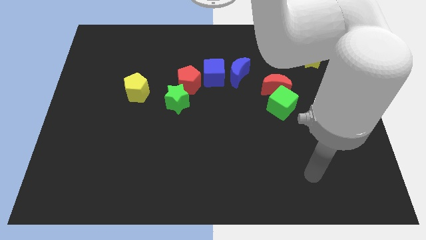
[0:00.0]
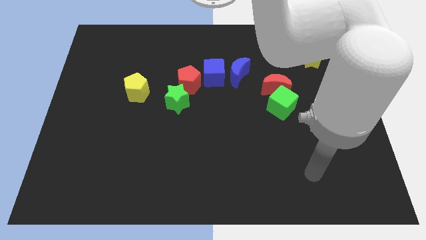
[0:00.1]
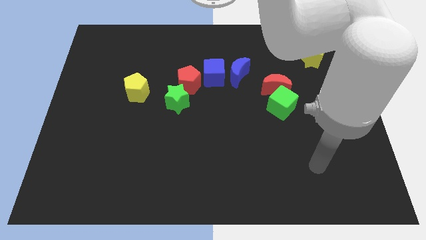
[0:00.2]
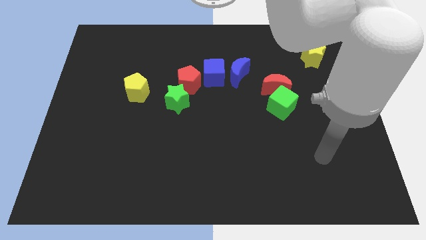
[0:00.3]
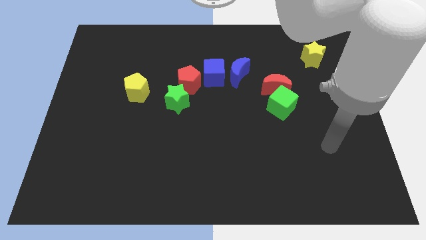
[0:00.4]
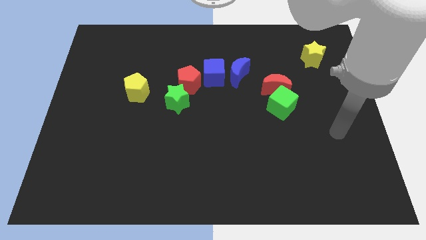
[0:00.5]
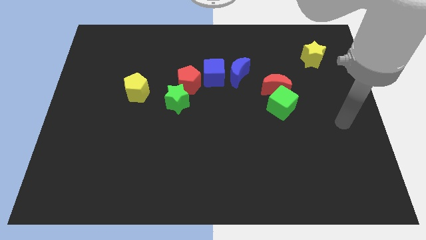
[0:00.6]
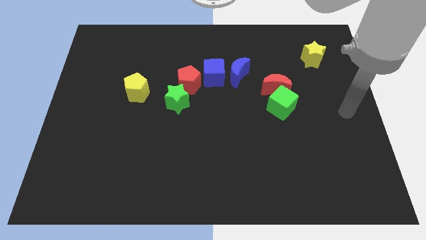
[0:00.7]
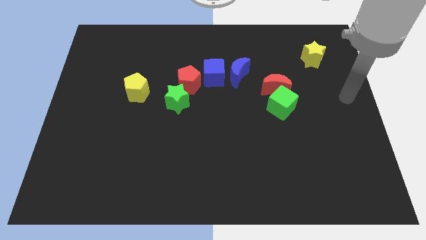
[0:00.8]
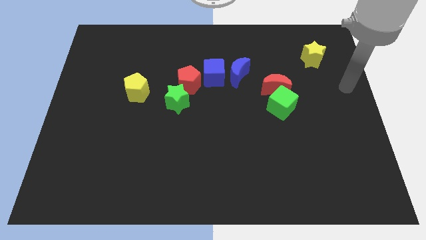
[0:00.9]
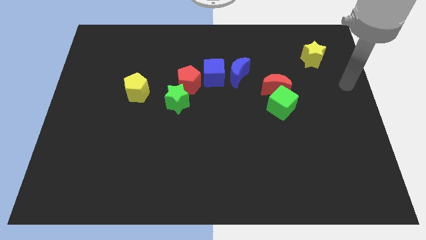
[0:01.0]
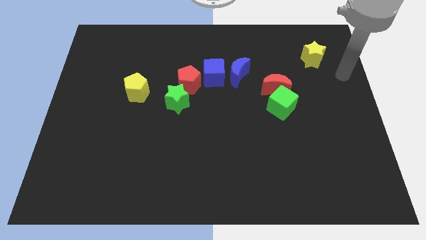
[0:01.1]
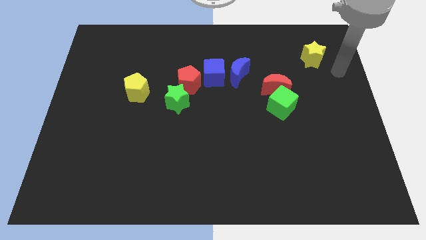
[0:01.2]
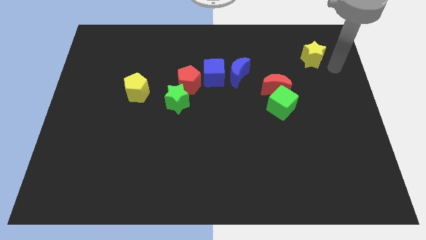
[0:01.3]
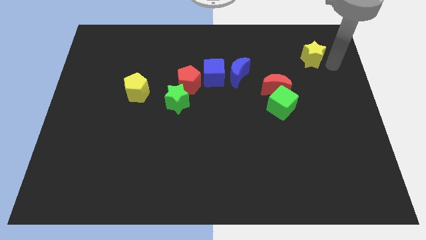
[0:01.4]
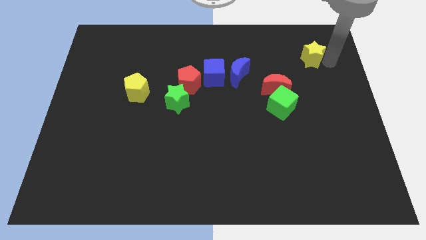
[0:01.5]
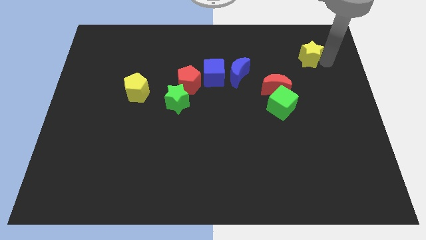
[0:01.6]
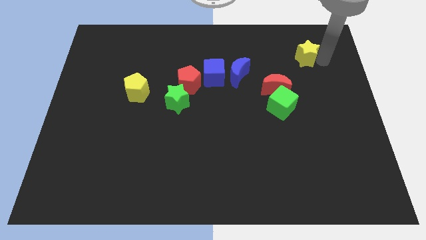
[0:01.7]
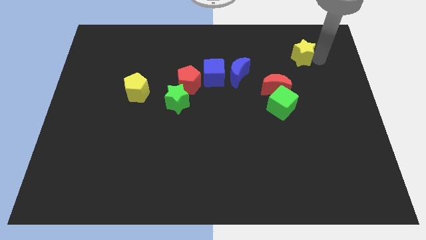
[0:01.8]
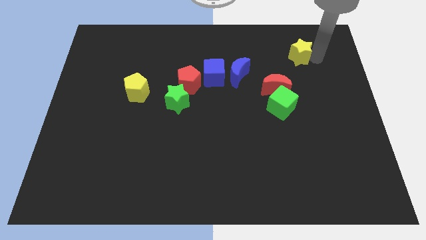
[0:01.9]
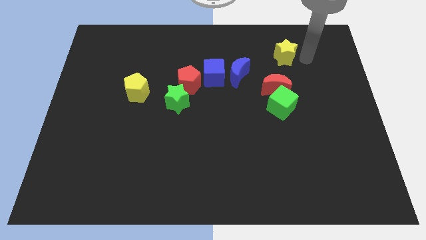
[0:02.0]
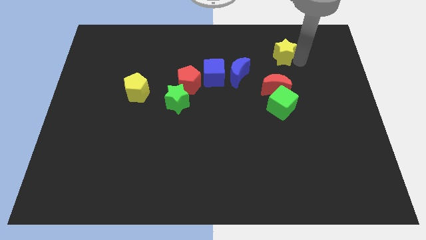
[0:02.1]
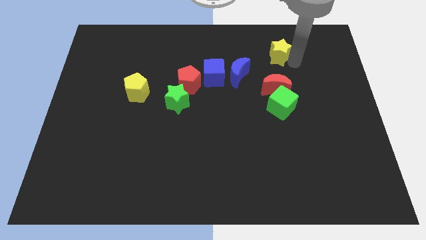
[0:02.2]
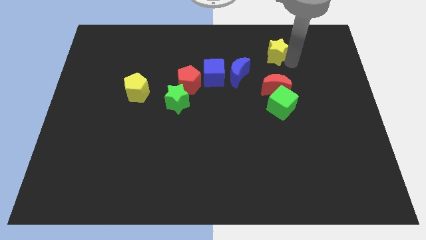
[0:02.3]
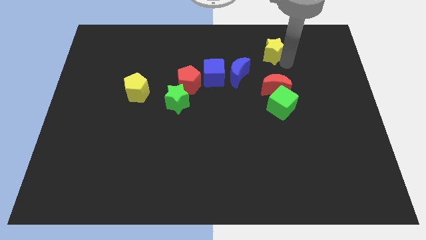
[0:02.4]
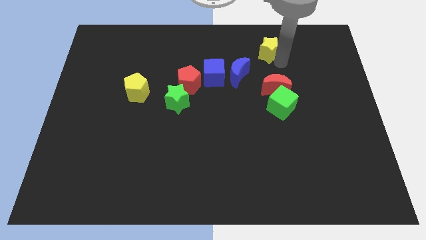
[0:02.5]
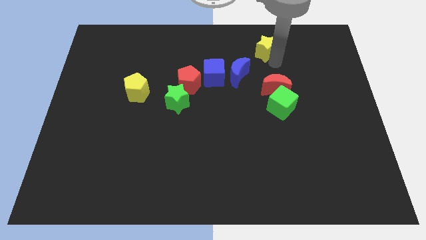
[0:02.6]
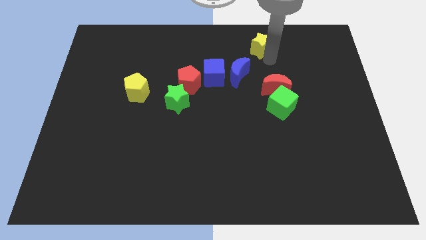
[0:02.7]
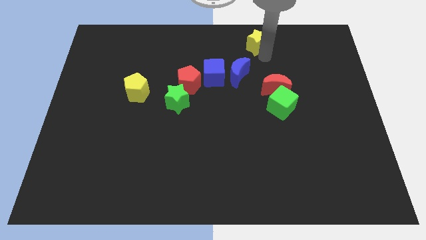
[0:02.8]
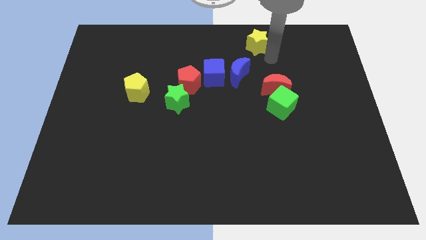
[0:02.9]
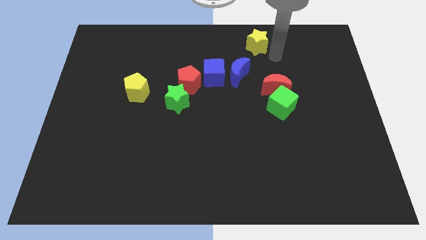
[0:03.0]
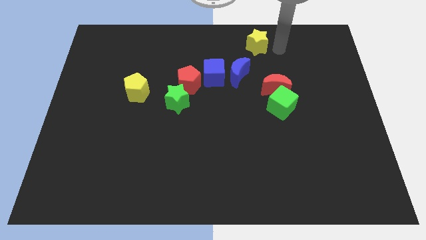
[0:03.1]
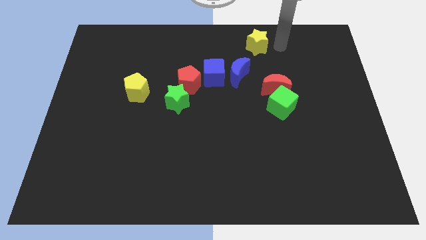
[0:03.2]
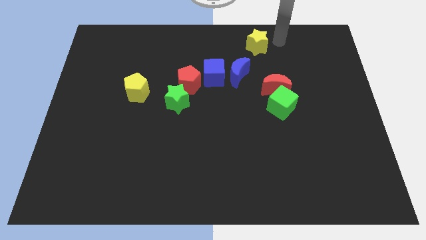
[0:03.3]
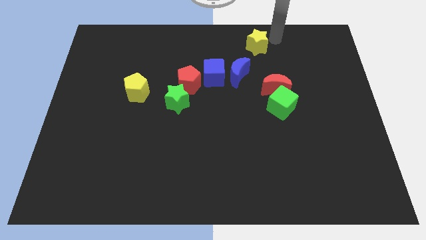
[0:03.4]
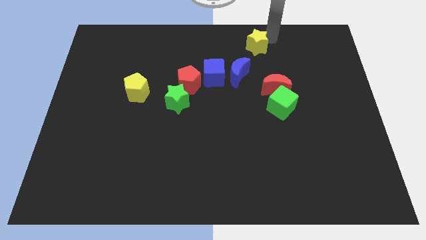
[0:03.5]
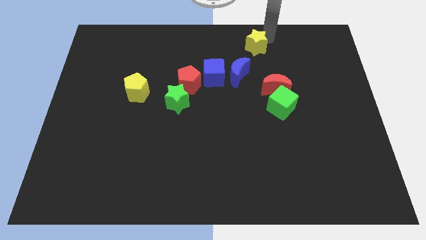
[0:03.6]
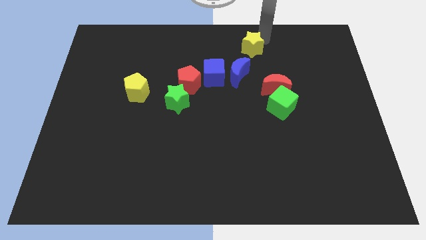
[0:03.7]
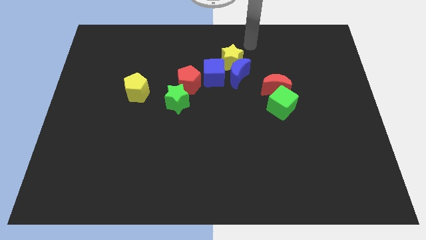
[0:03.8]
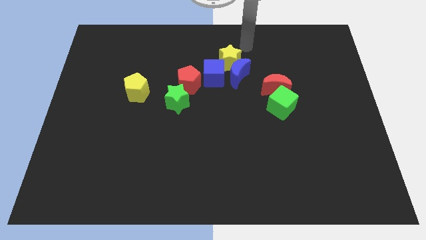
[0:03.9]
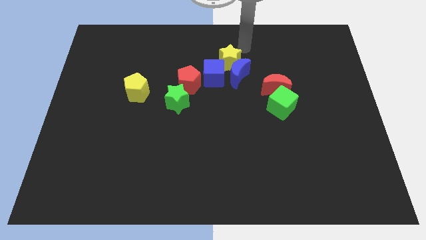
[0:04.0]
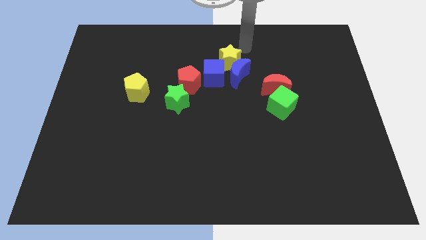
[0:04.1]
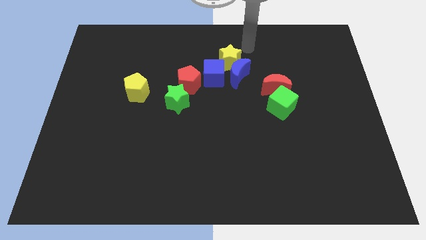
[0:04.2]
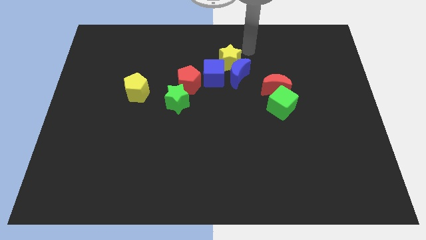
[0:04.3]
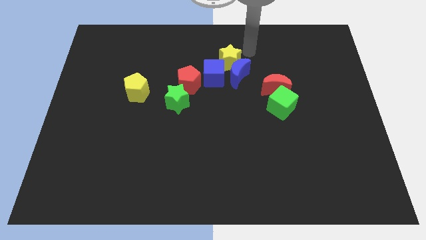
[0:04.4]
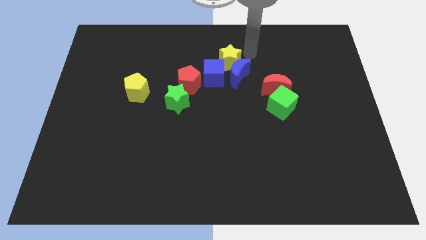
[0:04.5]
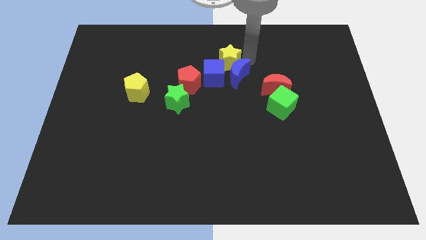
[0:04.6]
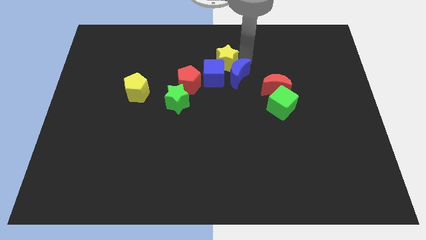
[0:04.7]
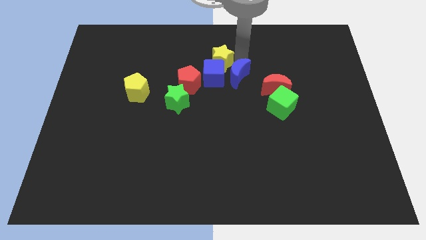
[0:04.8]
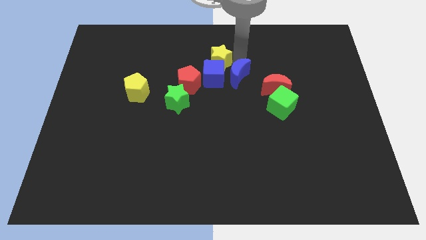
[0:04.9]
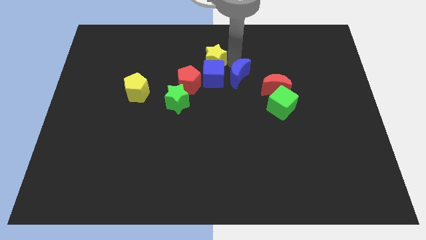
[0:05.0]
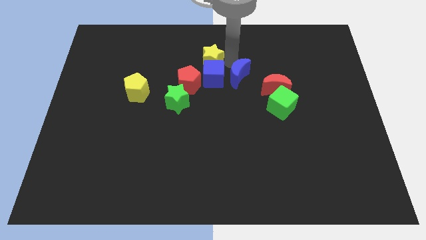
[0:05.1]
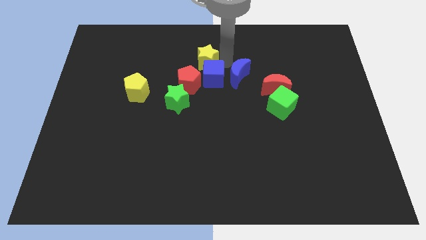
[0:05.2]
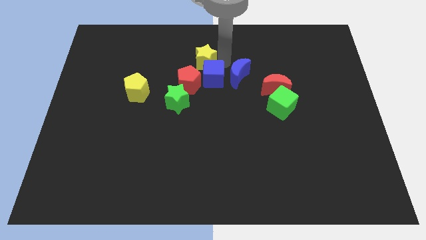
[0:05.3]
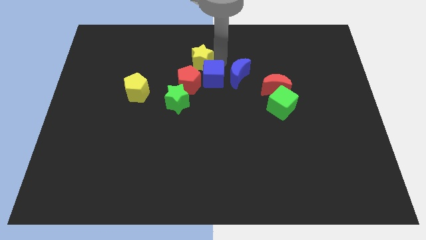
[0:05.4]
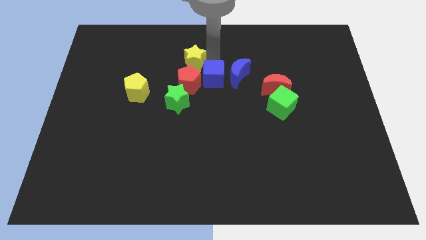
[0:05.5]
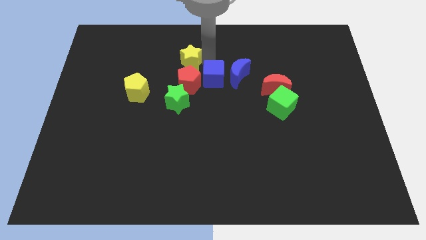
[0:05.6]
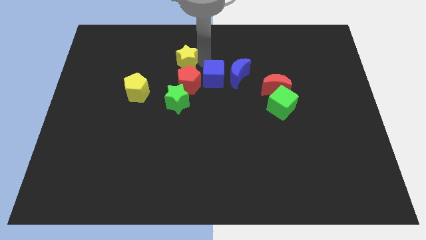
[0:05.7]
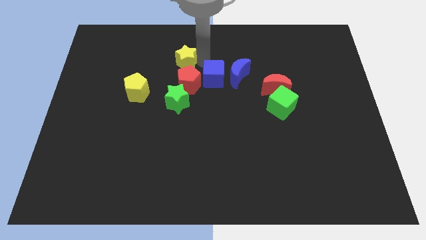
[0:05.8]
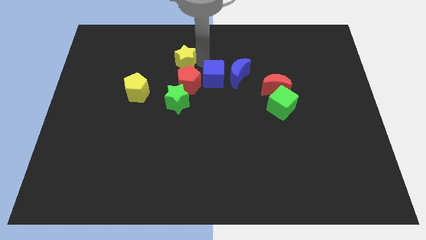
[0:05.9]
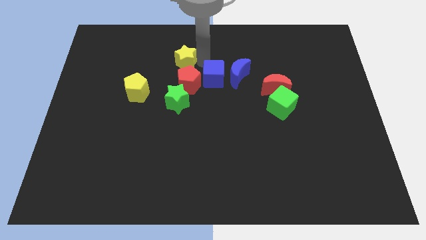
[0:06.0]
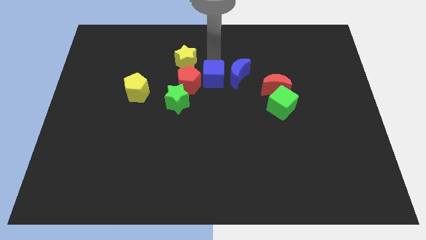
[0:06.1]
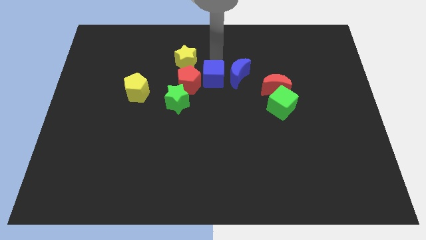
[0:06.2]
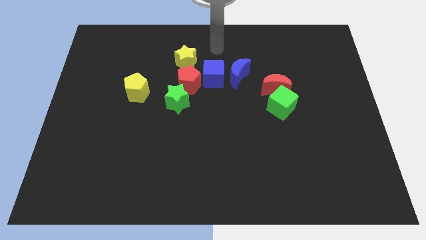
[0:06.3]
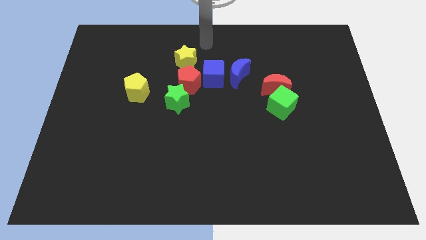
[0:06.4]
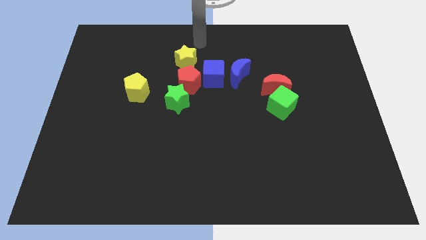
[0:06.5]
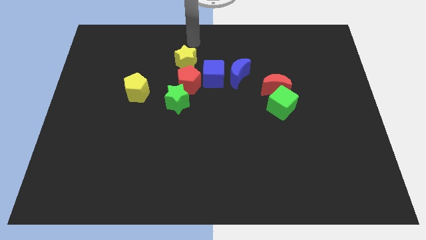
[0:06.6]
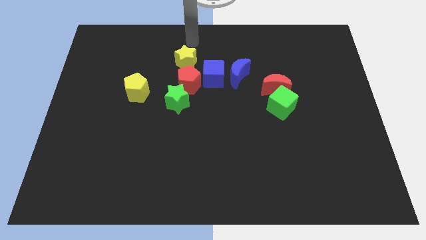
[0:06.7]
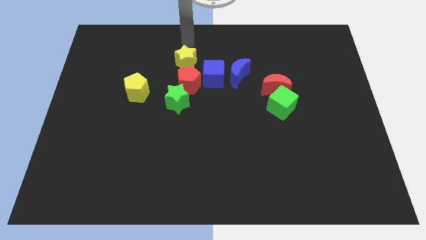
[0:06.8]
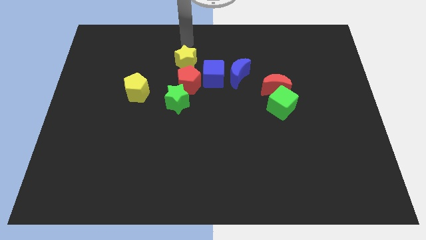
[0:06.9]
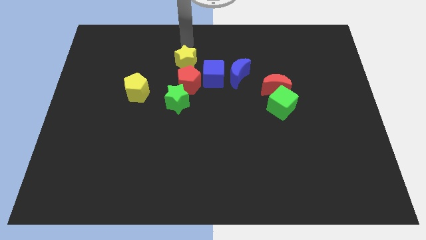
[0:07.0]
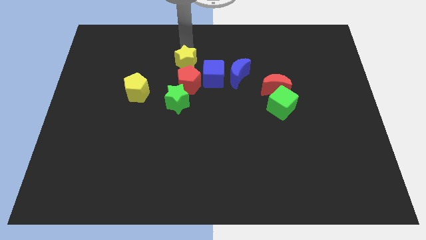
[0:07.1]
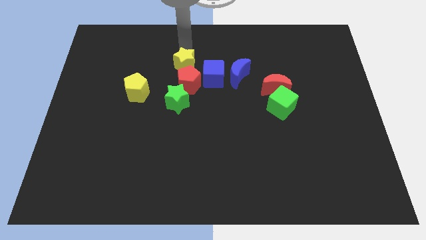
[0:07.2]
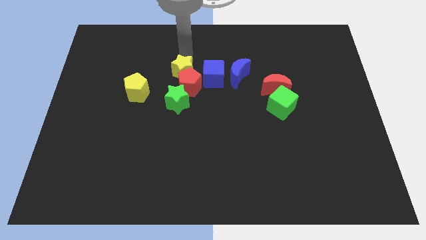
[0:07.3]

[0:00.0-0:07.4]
slide the yellow star to the red pentagon

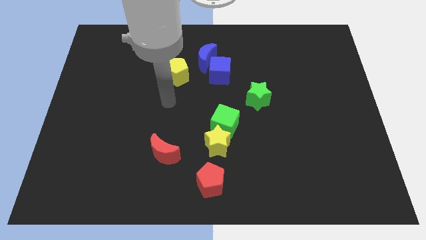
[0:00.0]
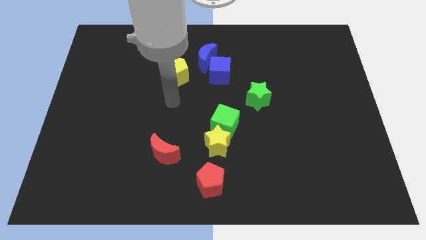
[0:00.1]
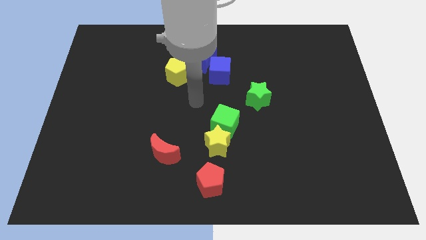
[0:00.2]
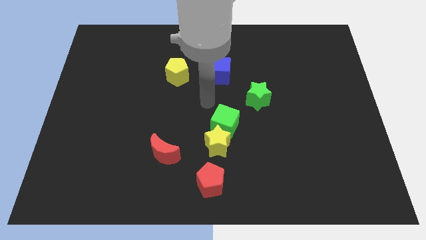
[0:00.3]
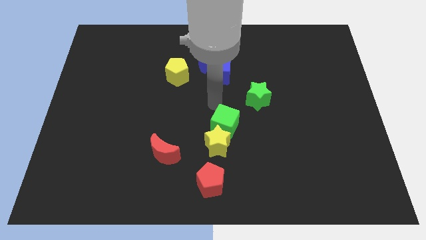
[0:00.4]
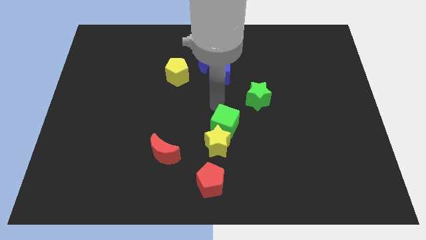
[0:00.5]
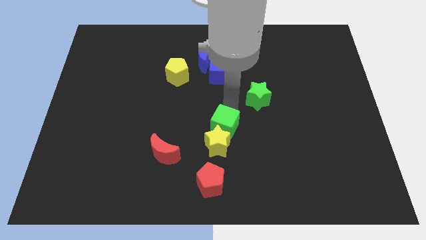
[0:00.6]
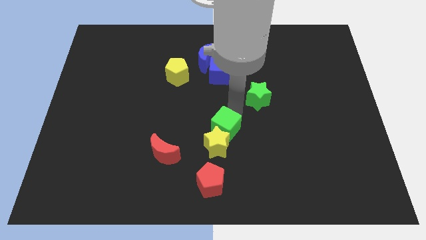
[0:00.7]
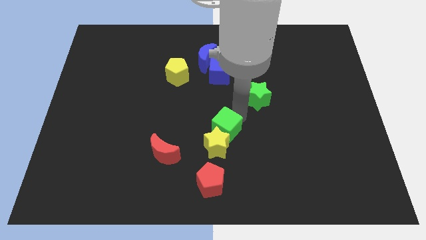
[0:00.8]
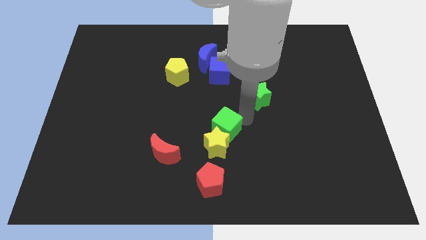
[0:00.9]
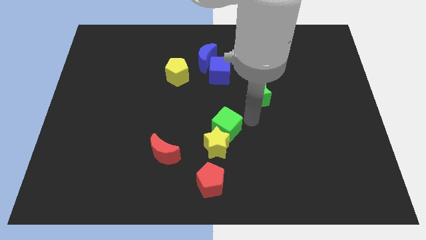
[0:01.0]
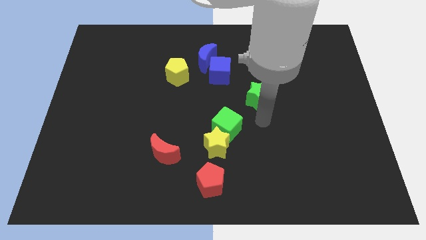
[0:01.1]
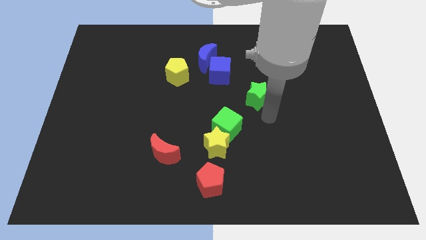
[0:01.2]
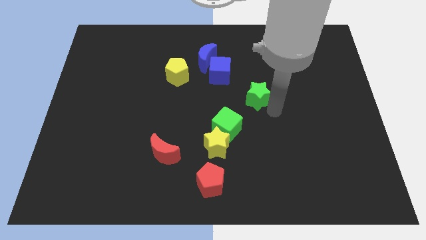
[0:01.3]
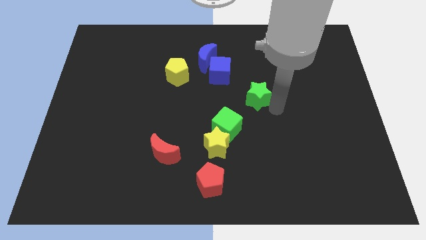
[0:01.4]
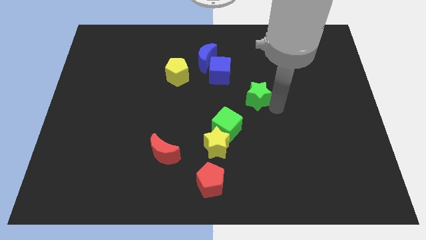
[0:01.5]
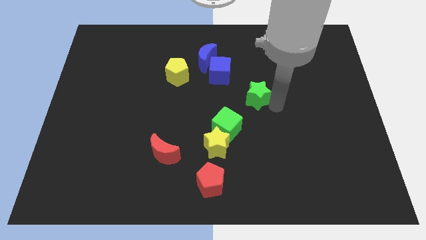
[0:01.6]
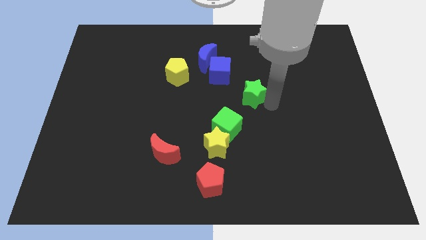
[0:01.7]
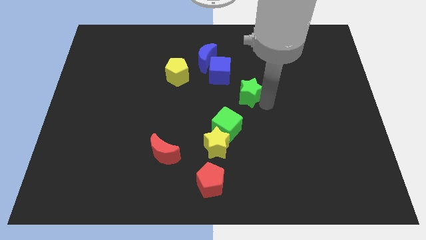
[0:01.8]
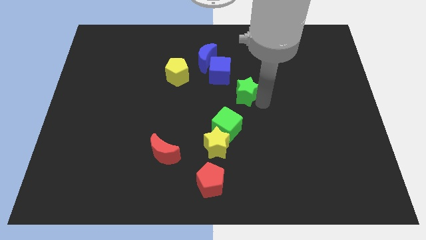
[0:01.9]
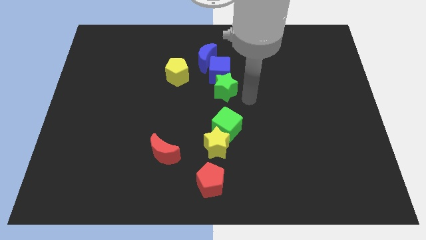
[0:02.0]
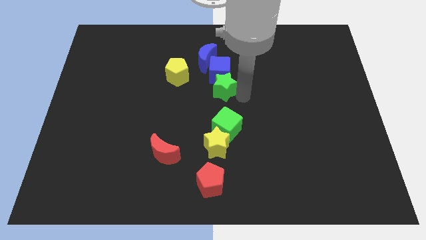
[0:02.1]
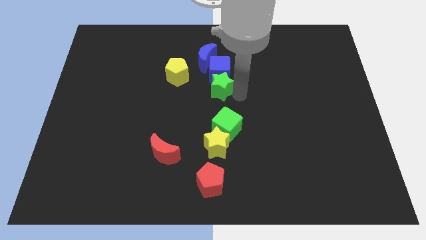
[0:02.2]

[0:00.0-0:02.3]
move the green star to the blue cube
